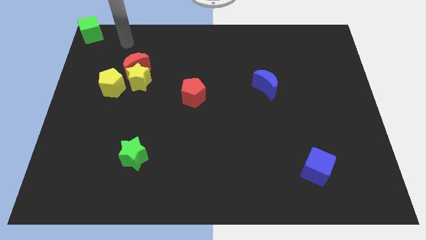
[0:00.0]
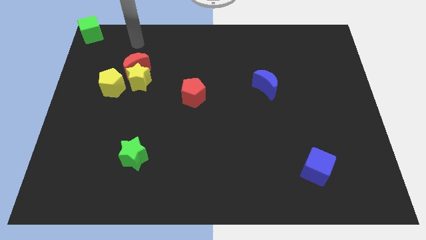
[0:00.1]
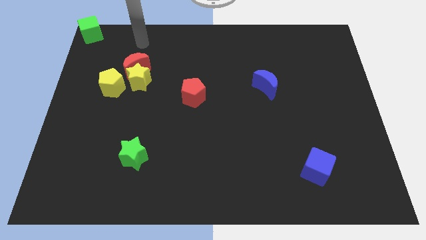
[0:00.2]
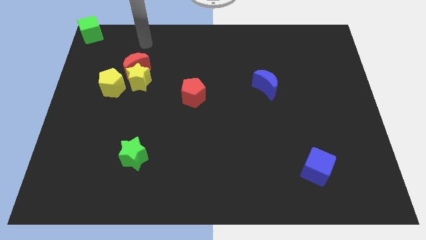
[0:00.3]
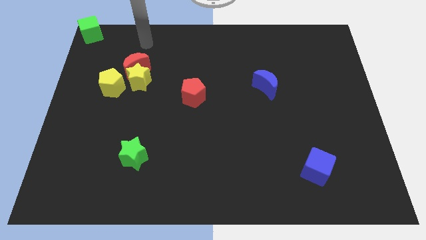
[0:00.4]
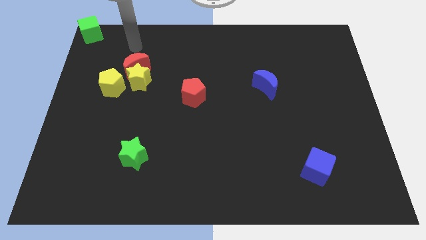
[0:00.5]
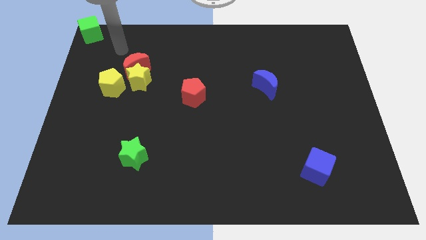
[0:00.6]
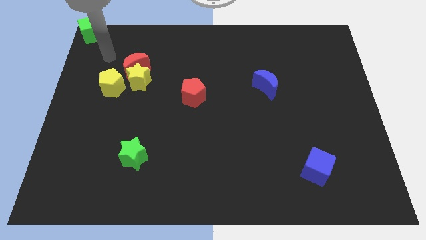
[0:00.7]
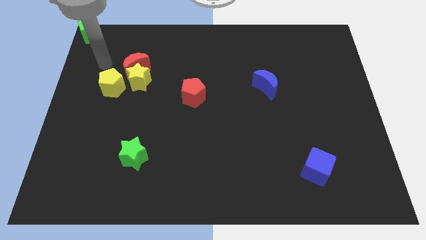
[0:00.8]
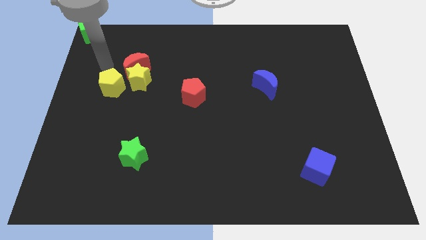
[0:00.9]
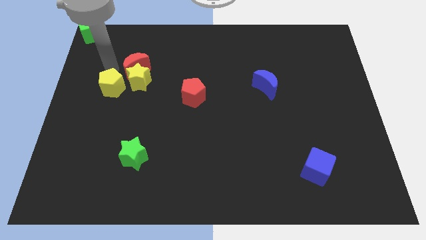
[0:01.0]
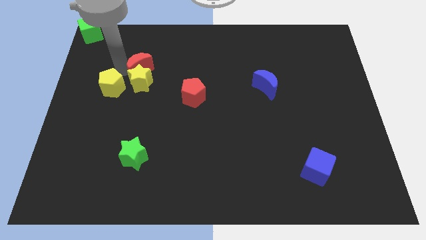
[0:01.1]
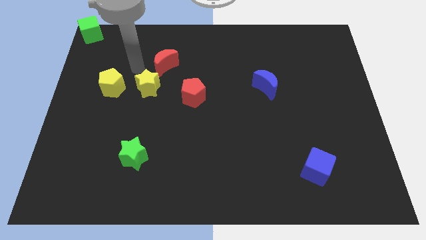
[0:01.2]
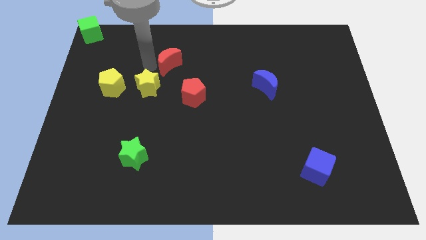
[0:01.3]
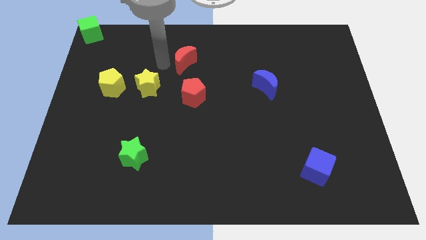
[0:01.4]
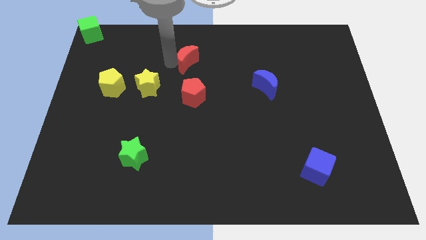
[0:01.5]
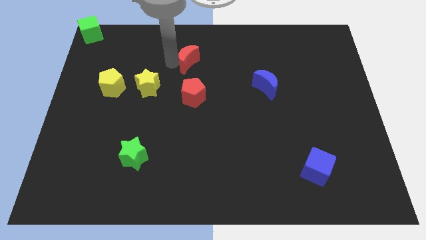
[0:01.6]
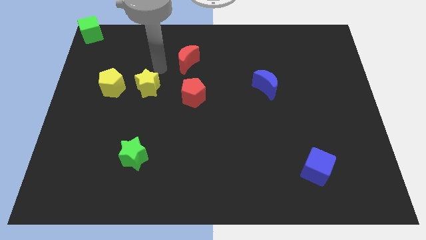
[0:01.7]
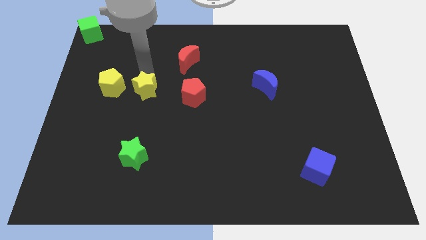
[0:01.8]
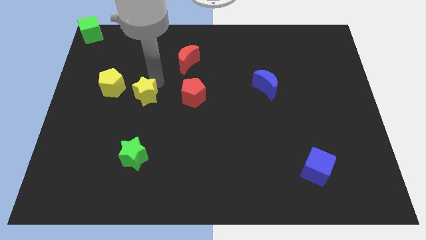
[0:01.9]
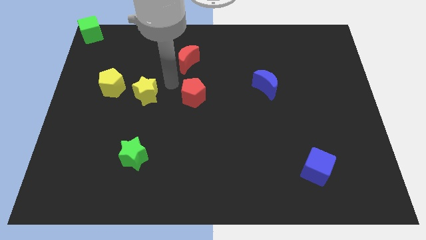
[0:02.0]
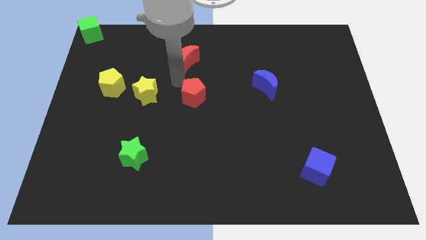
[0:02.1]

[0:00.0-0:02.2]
separate the red moon from the yellow star

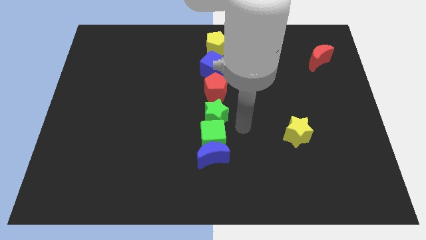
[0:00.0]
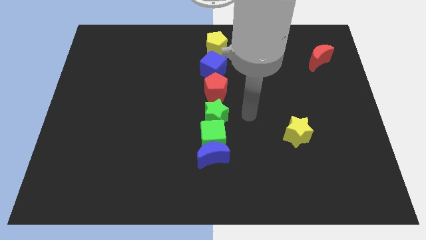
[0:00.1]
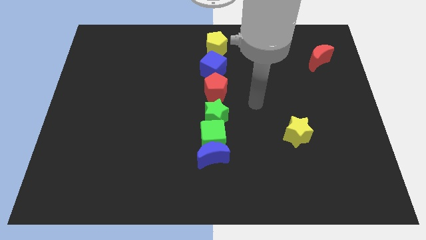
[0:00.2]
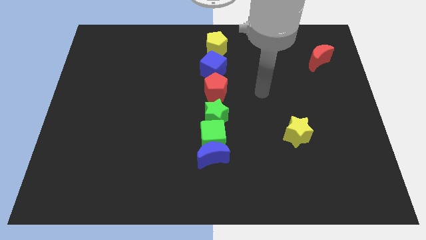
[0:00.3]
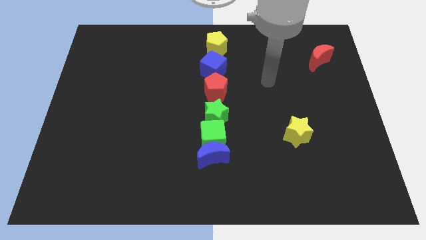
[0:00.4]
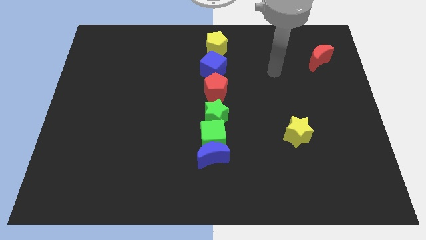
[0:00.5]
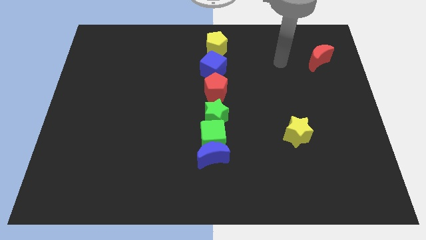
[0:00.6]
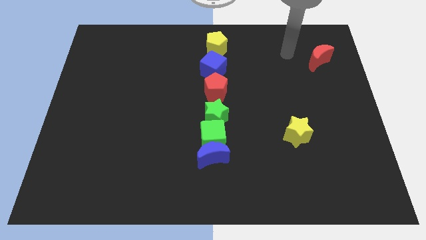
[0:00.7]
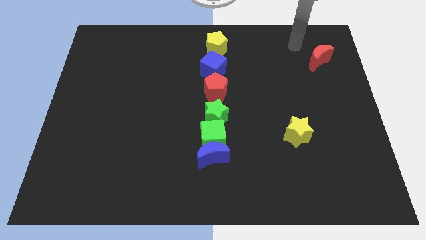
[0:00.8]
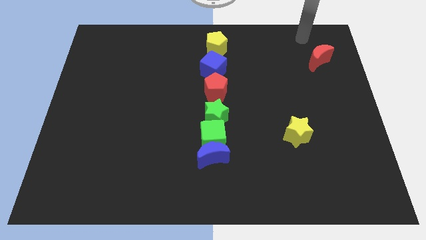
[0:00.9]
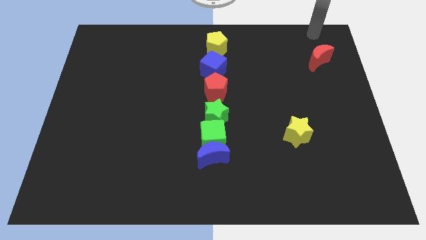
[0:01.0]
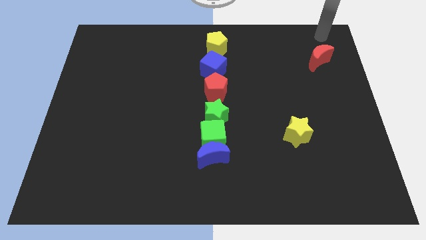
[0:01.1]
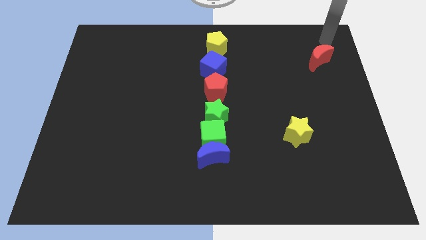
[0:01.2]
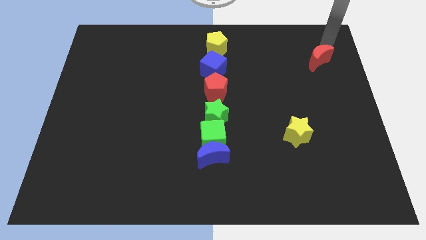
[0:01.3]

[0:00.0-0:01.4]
place your hand above the red crescent

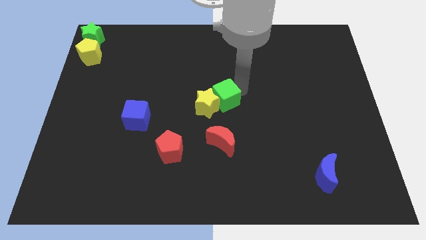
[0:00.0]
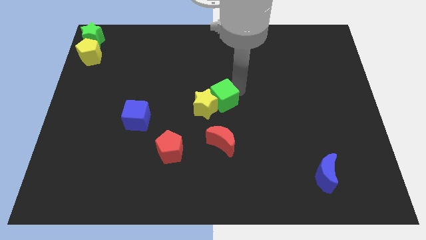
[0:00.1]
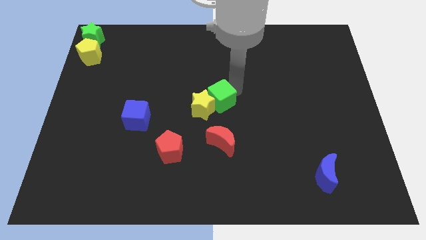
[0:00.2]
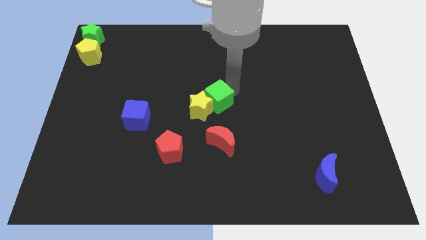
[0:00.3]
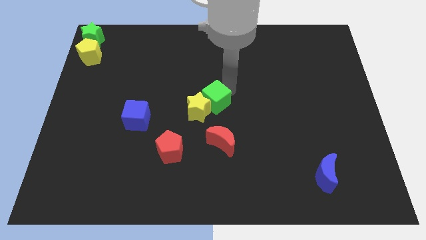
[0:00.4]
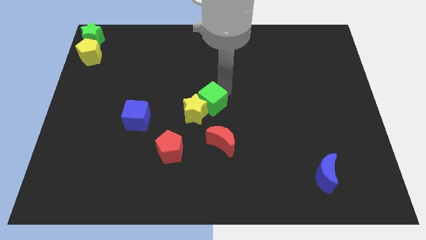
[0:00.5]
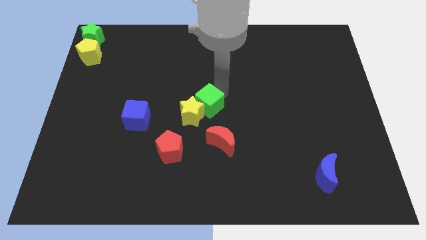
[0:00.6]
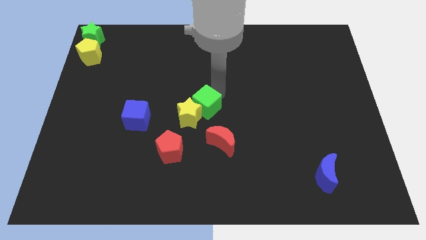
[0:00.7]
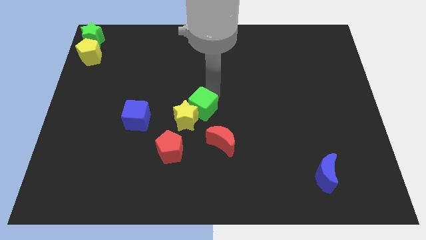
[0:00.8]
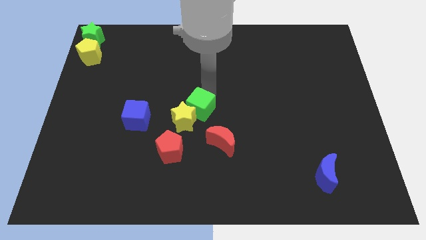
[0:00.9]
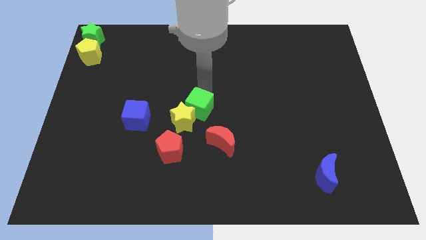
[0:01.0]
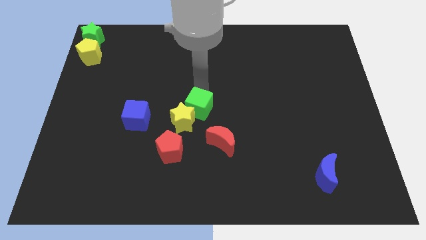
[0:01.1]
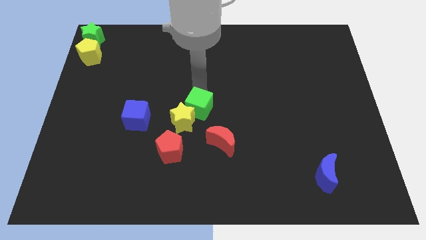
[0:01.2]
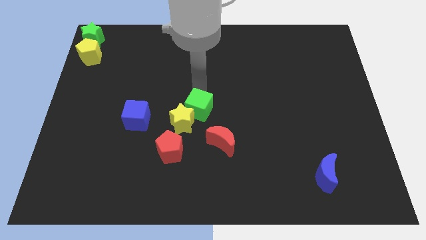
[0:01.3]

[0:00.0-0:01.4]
move green cube and yellow star towards red pentagon

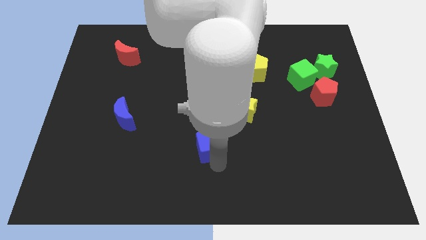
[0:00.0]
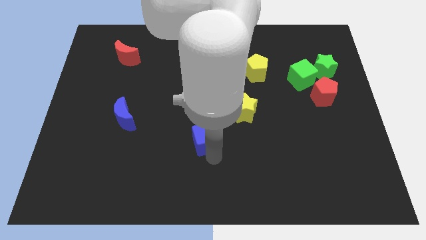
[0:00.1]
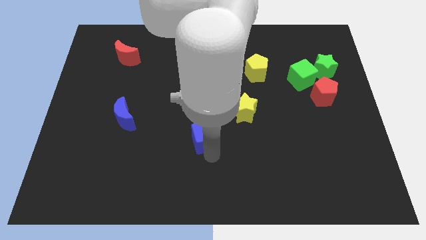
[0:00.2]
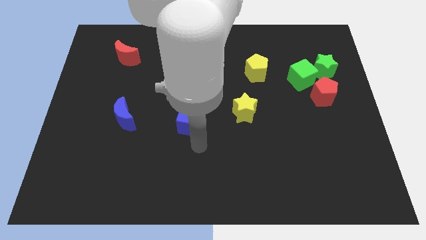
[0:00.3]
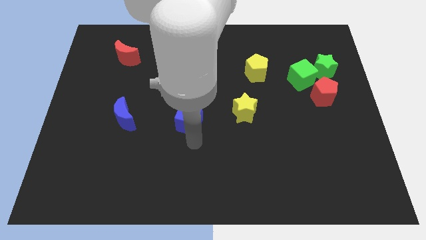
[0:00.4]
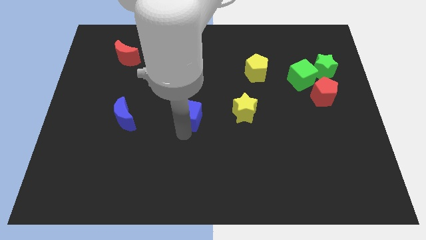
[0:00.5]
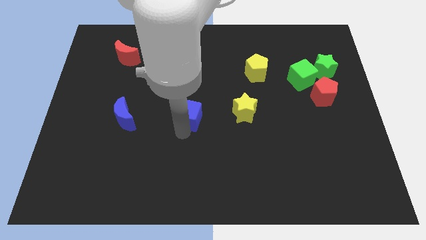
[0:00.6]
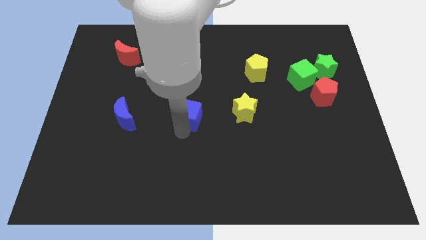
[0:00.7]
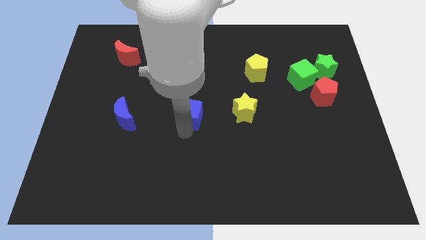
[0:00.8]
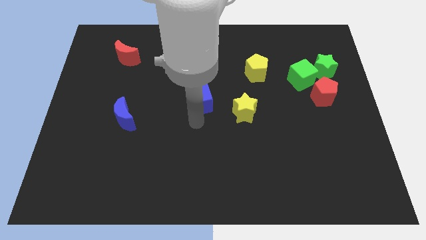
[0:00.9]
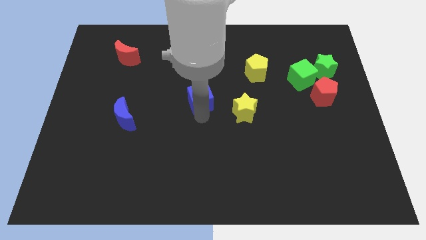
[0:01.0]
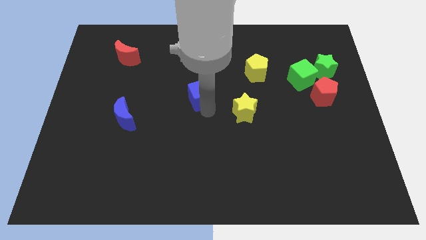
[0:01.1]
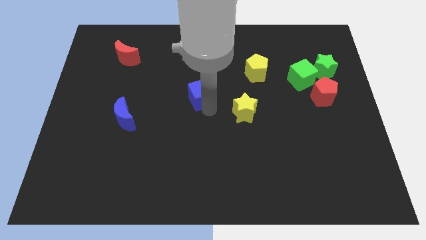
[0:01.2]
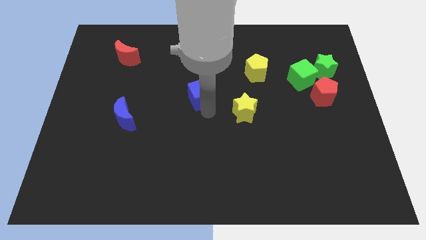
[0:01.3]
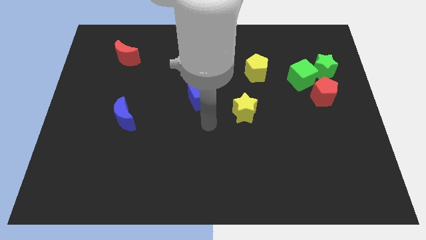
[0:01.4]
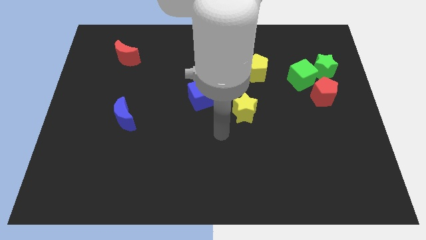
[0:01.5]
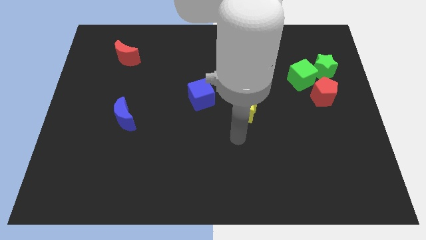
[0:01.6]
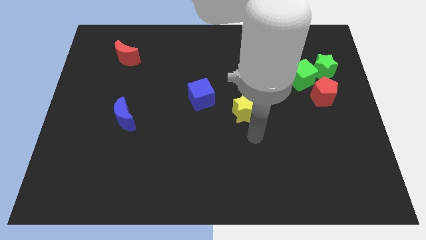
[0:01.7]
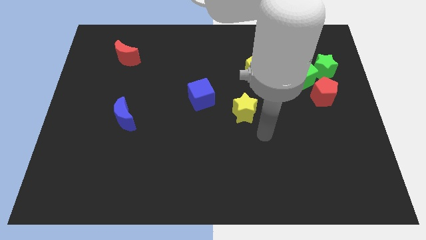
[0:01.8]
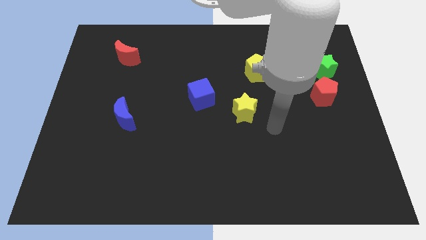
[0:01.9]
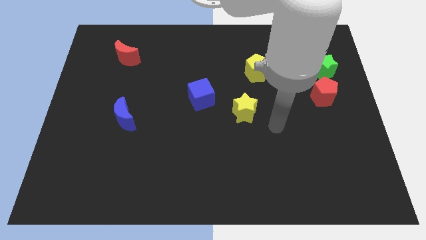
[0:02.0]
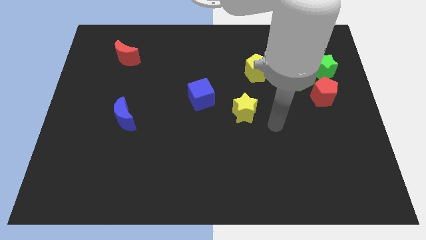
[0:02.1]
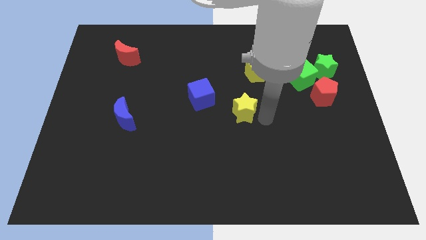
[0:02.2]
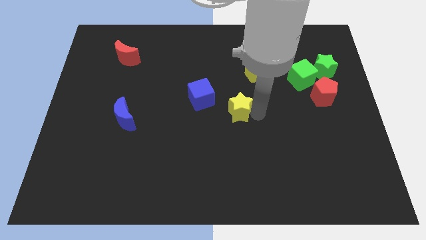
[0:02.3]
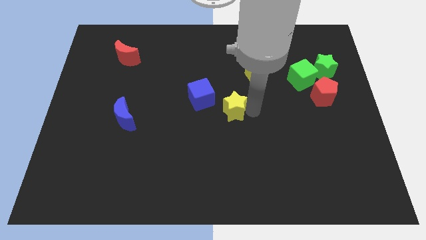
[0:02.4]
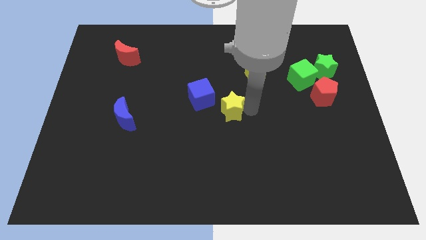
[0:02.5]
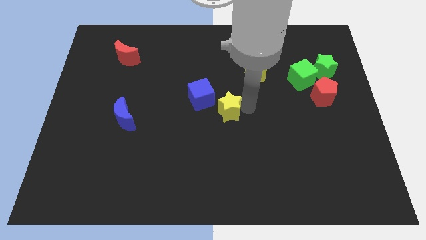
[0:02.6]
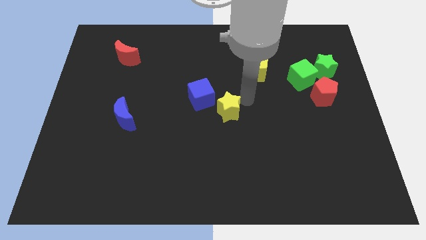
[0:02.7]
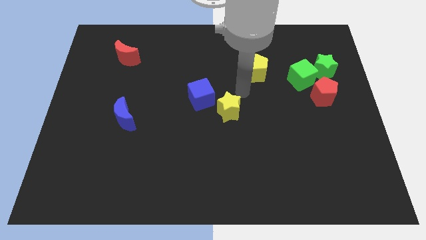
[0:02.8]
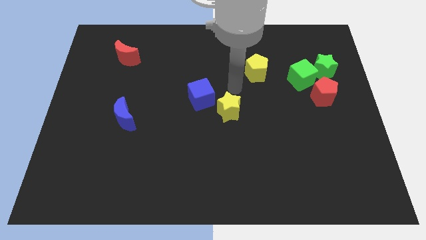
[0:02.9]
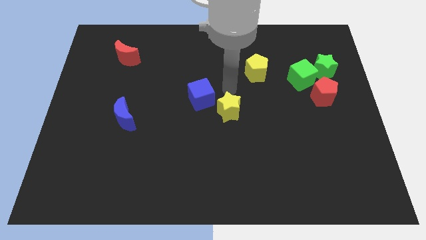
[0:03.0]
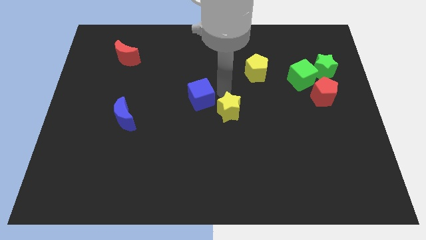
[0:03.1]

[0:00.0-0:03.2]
place the blue cube and yellow star together at the center of the board

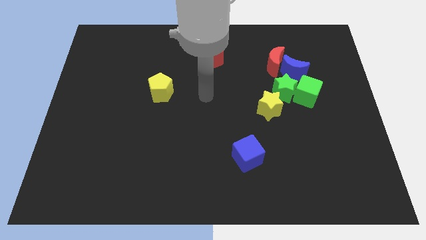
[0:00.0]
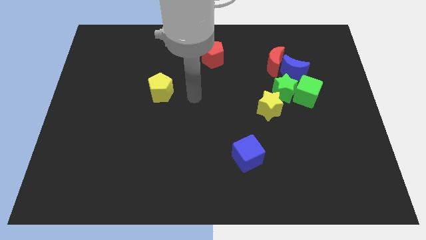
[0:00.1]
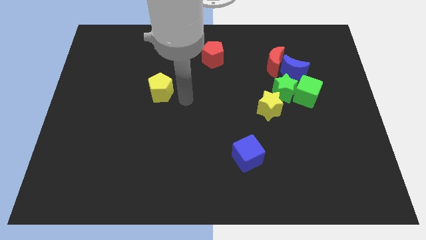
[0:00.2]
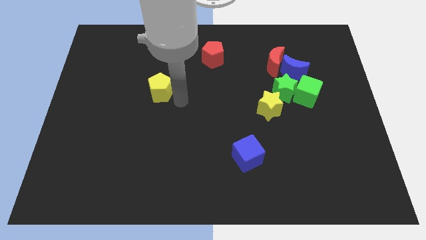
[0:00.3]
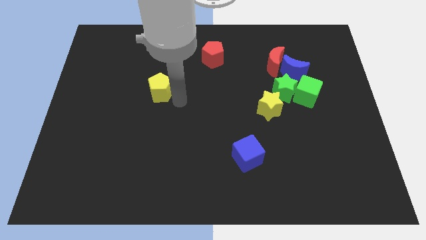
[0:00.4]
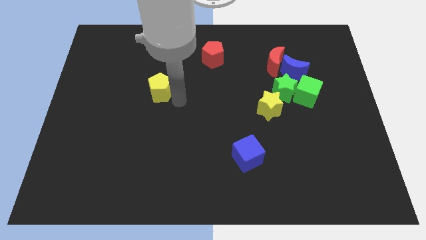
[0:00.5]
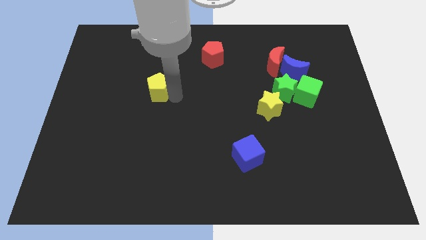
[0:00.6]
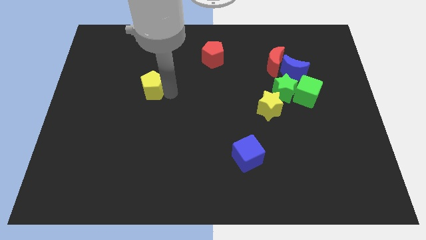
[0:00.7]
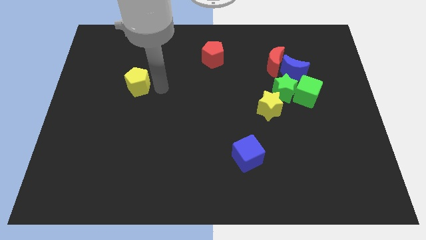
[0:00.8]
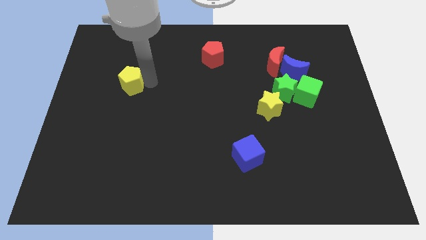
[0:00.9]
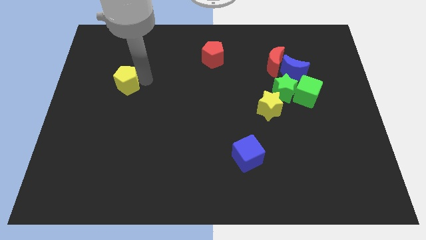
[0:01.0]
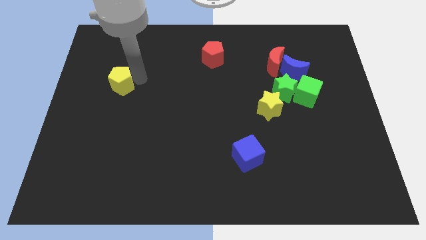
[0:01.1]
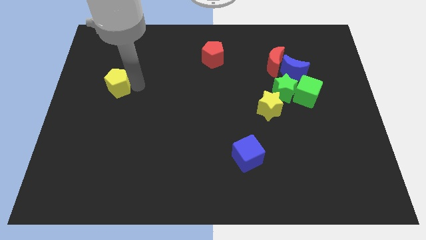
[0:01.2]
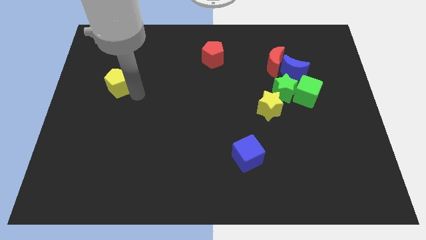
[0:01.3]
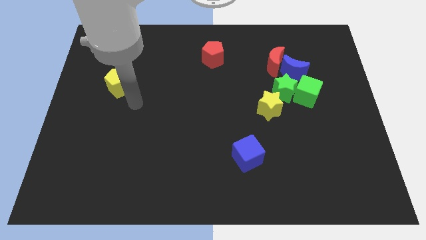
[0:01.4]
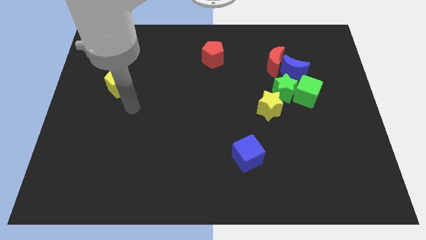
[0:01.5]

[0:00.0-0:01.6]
move yellow pentagon towards its left
